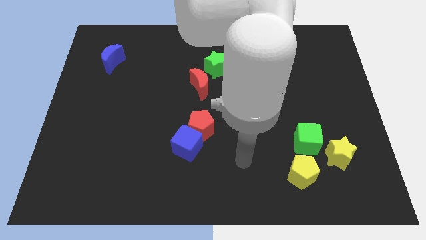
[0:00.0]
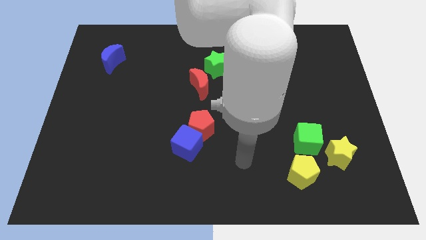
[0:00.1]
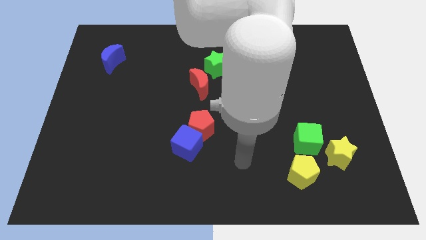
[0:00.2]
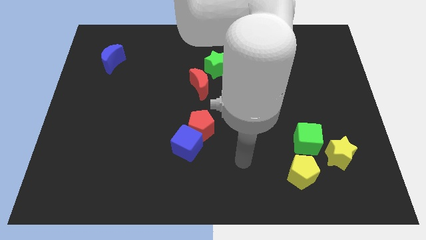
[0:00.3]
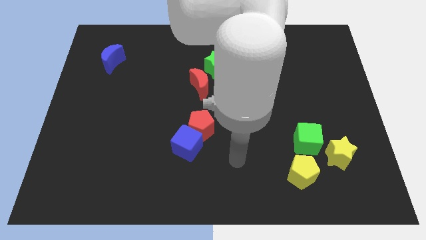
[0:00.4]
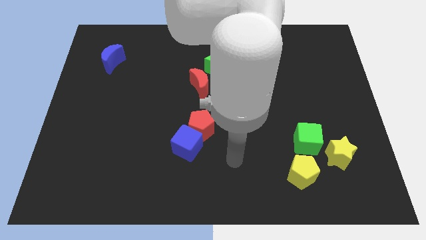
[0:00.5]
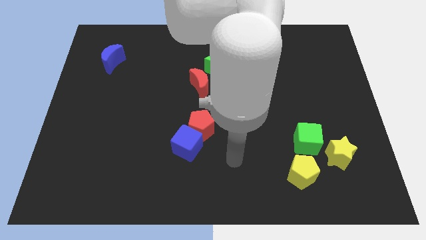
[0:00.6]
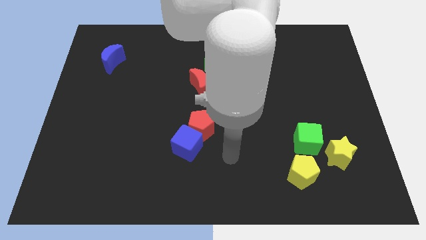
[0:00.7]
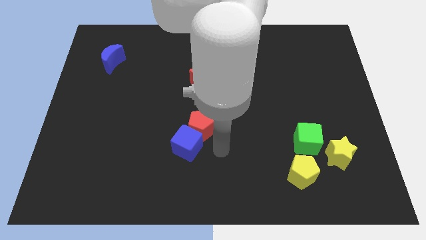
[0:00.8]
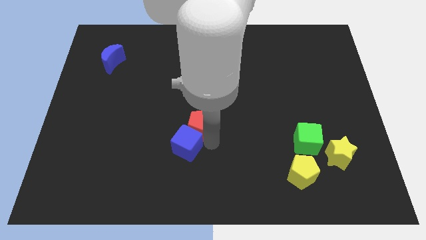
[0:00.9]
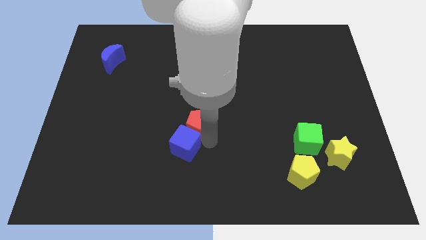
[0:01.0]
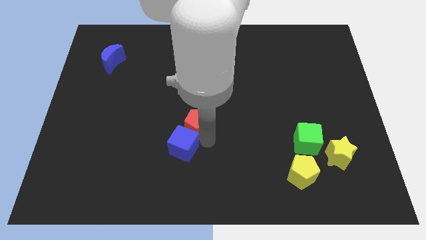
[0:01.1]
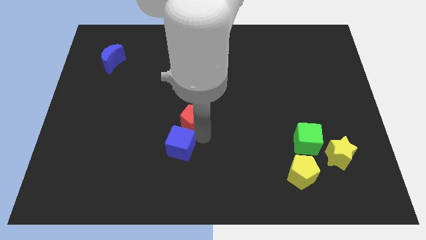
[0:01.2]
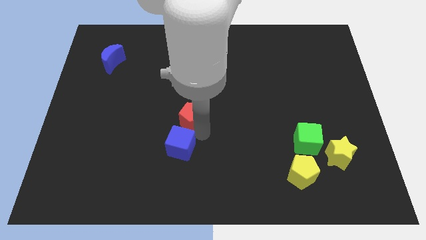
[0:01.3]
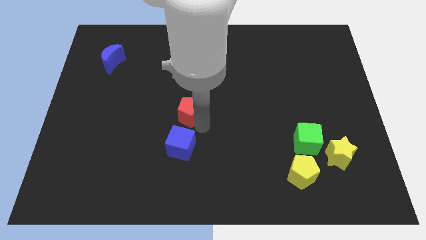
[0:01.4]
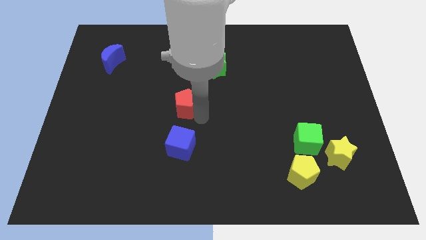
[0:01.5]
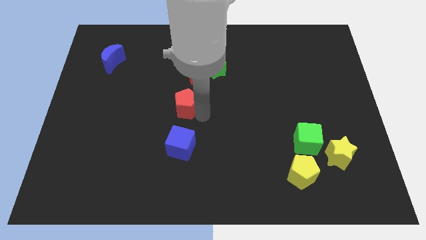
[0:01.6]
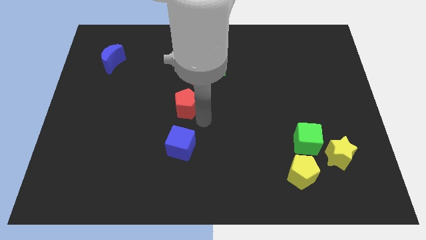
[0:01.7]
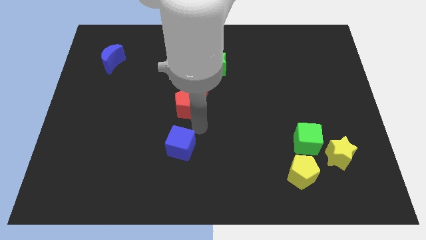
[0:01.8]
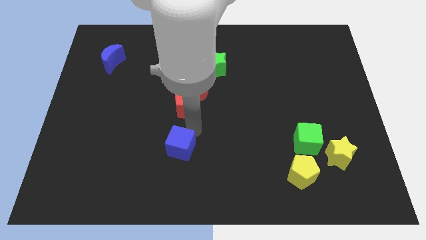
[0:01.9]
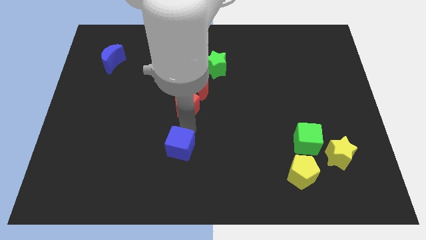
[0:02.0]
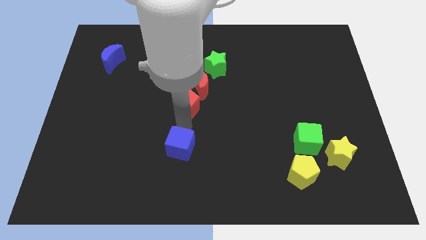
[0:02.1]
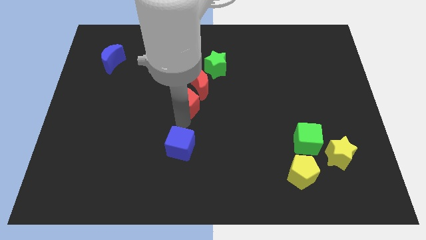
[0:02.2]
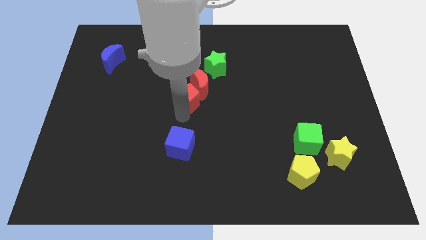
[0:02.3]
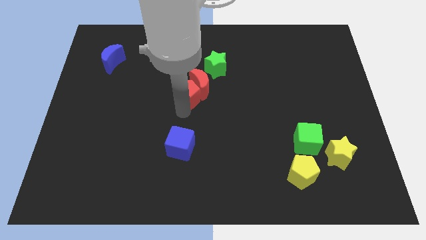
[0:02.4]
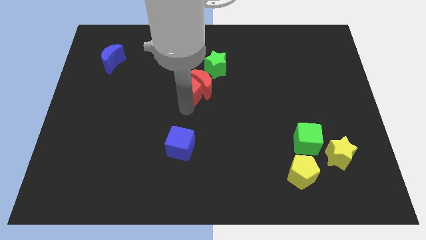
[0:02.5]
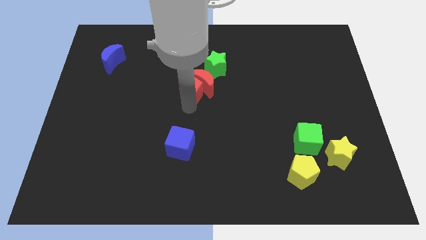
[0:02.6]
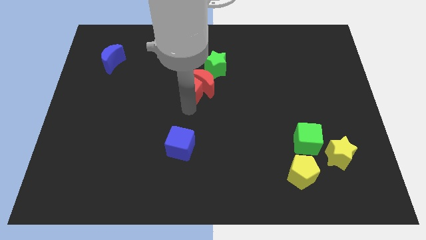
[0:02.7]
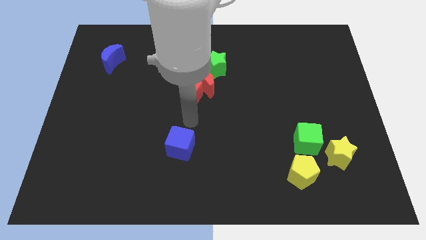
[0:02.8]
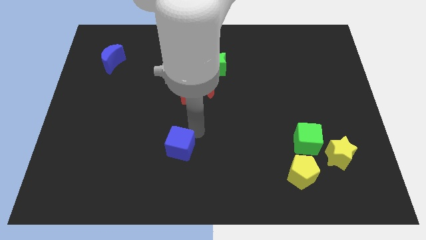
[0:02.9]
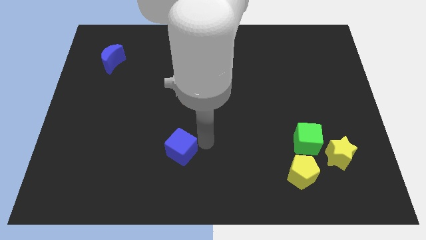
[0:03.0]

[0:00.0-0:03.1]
push the red pentagon into the bottom side of the red crescent

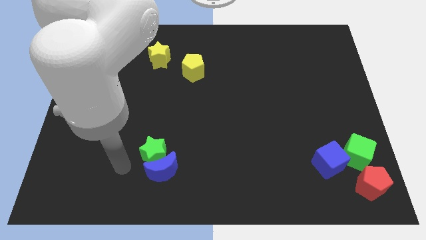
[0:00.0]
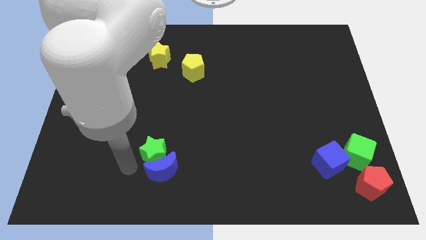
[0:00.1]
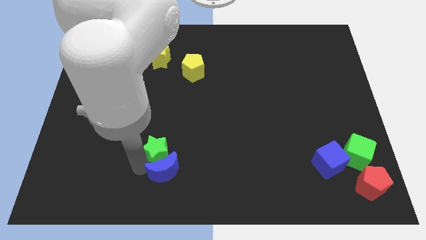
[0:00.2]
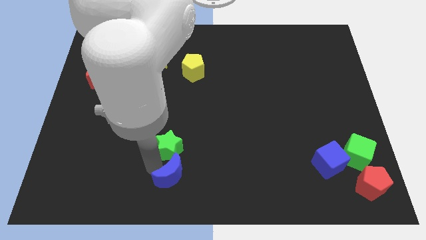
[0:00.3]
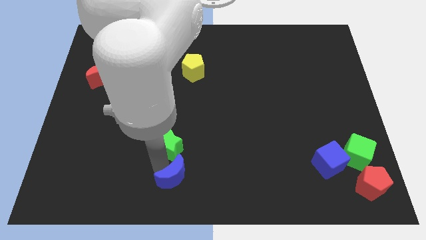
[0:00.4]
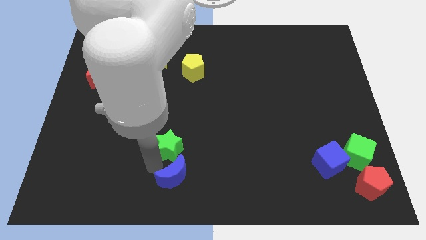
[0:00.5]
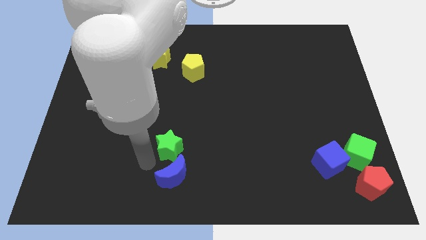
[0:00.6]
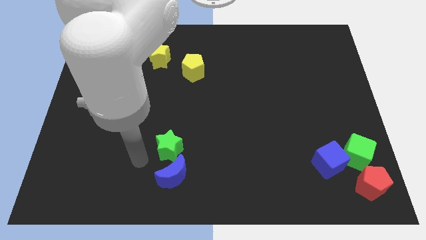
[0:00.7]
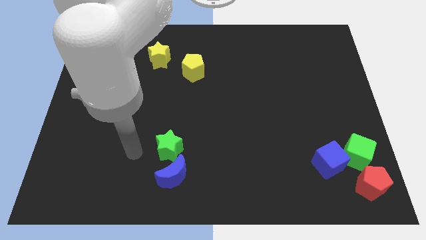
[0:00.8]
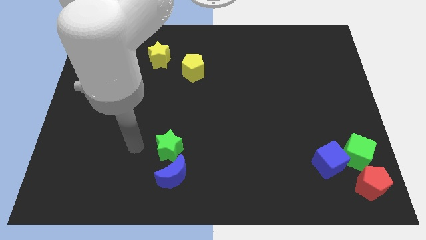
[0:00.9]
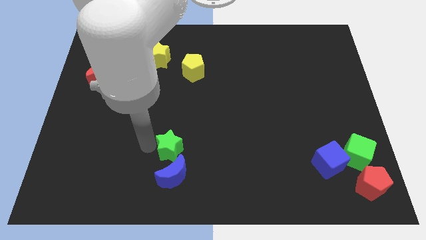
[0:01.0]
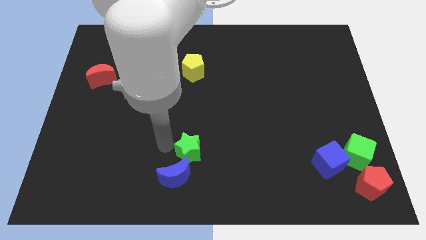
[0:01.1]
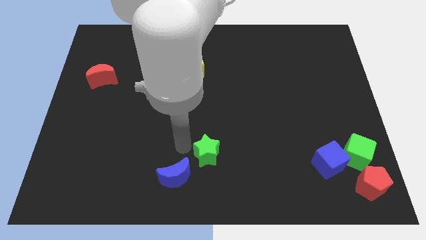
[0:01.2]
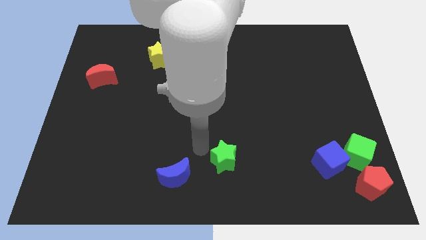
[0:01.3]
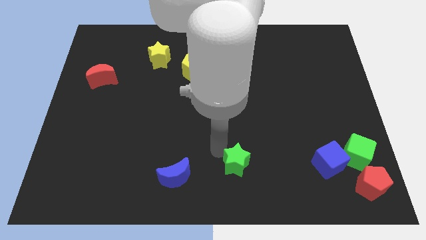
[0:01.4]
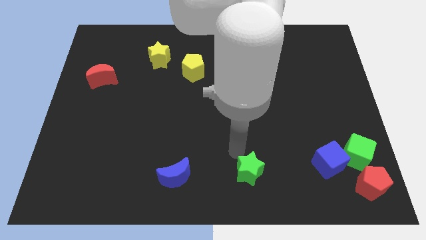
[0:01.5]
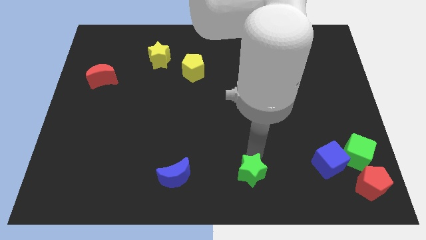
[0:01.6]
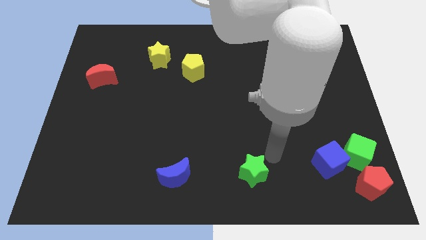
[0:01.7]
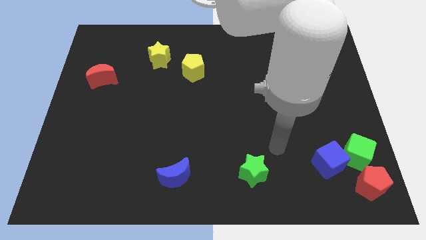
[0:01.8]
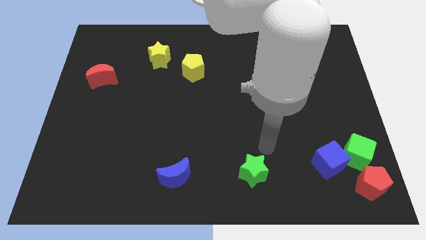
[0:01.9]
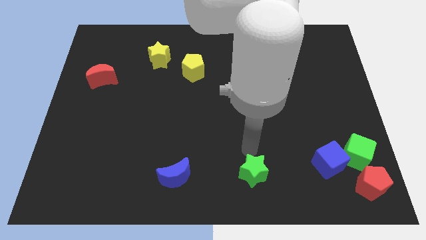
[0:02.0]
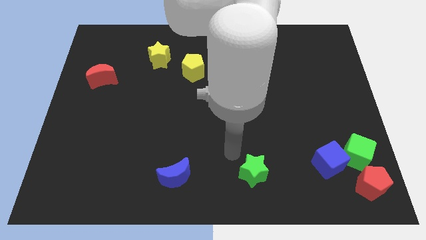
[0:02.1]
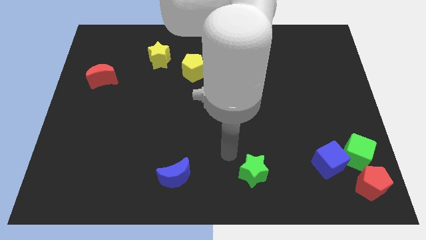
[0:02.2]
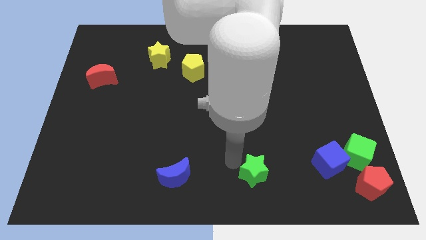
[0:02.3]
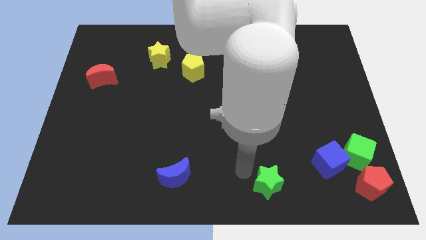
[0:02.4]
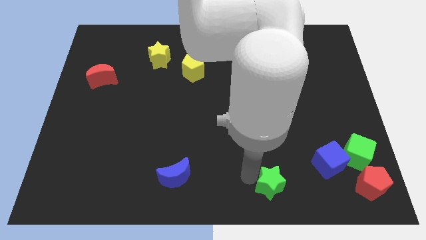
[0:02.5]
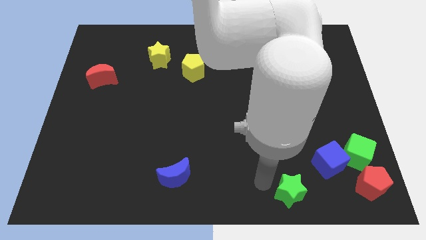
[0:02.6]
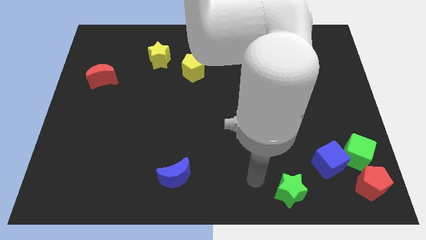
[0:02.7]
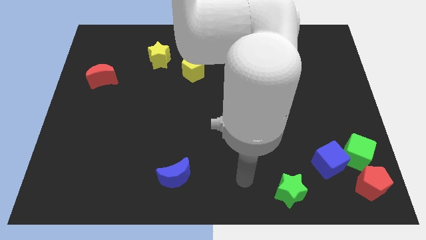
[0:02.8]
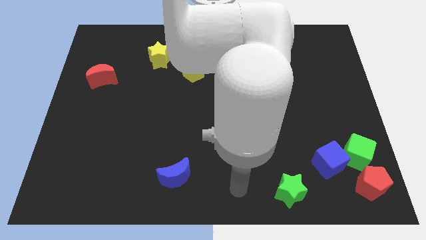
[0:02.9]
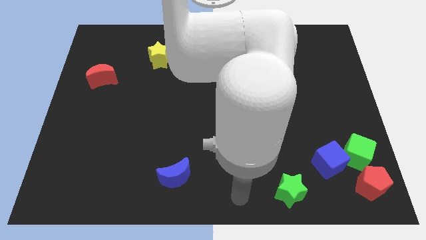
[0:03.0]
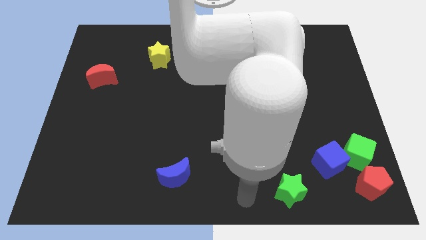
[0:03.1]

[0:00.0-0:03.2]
separate the green star from the blue crescent

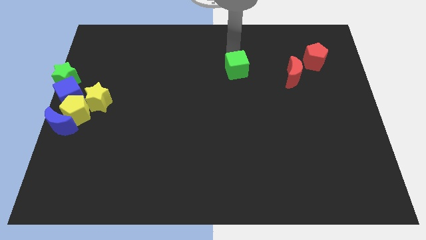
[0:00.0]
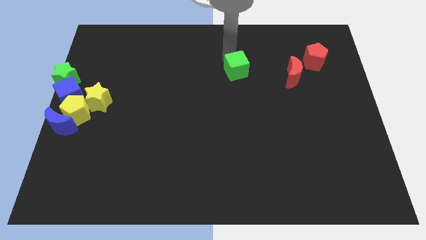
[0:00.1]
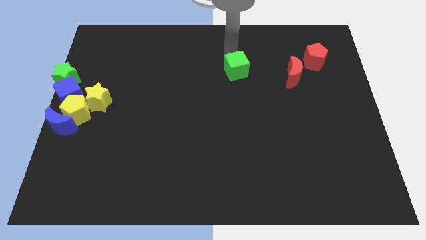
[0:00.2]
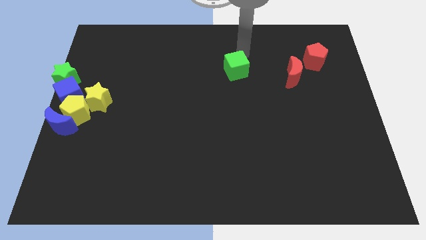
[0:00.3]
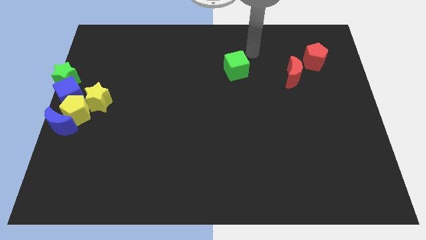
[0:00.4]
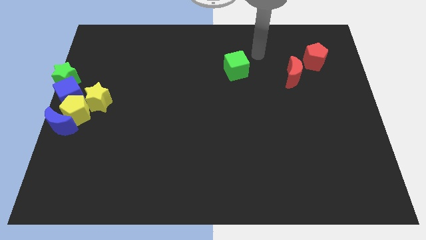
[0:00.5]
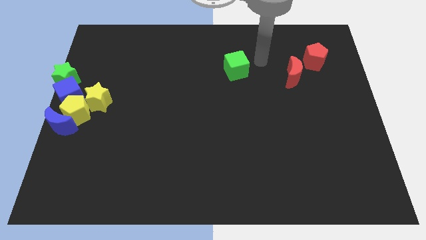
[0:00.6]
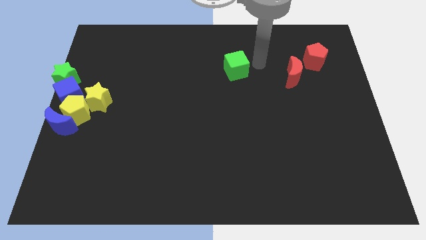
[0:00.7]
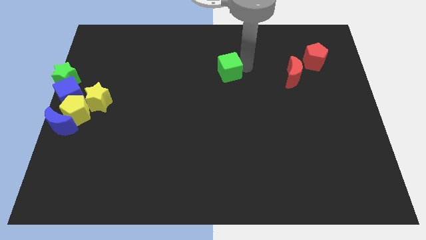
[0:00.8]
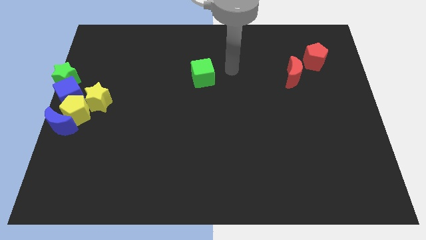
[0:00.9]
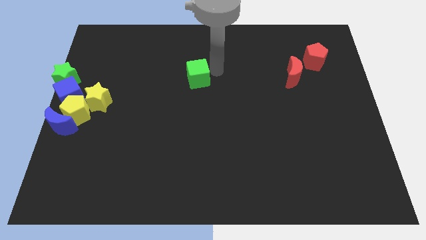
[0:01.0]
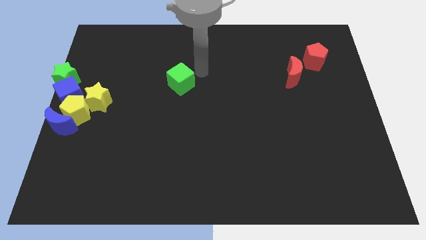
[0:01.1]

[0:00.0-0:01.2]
slide the green cube to the left

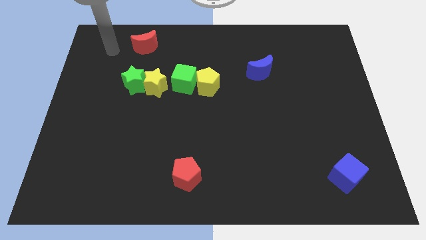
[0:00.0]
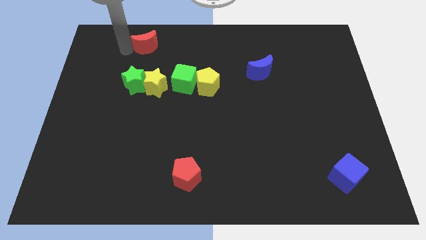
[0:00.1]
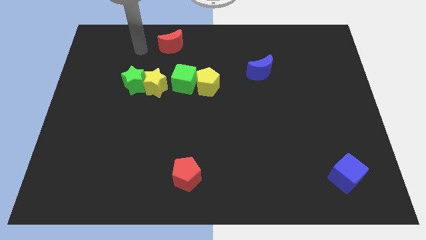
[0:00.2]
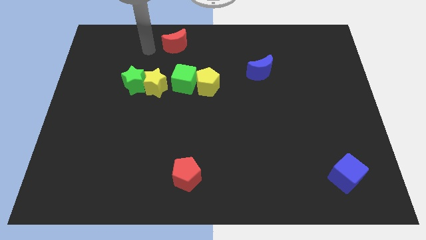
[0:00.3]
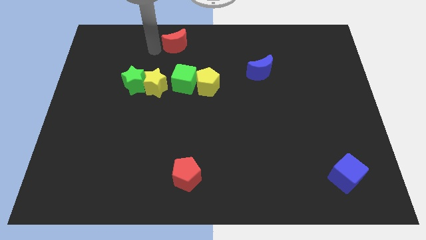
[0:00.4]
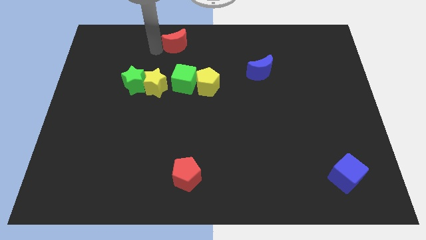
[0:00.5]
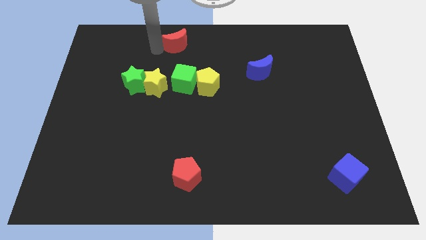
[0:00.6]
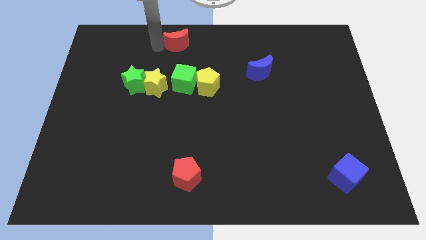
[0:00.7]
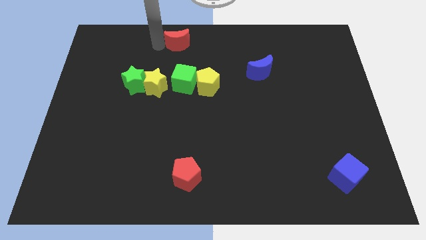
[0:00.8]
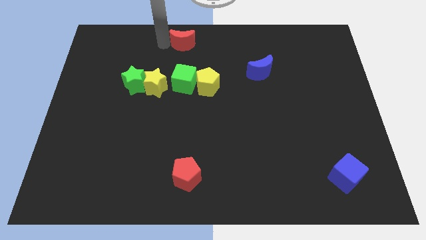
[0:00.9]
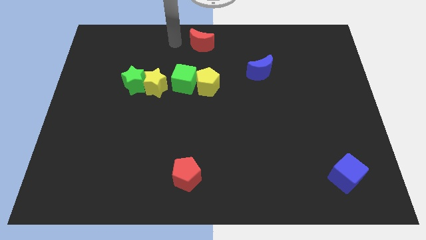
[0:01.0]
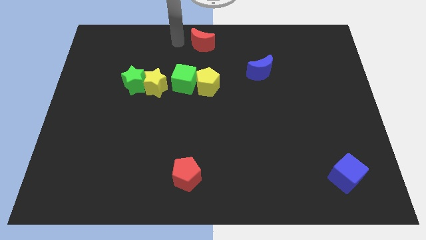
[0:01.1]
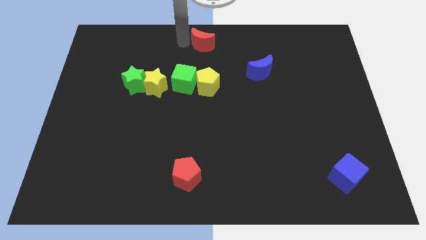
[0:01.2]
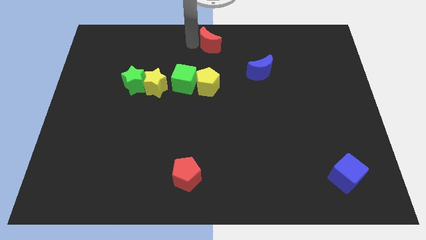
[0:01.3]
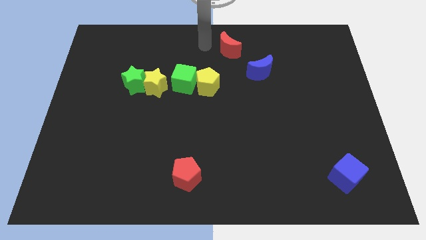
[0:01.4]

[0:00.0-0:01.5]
place the red moon vertically above the yellow pentagon
